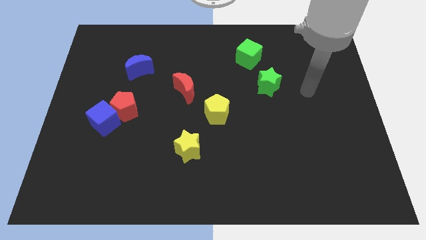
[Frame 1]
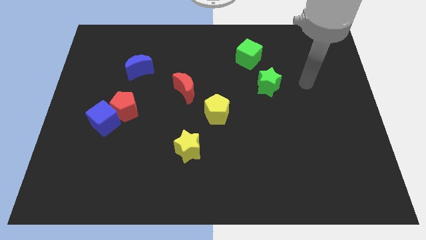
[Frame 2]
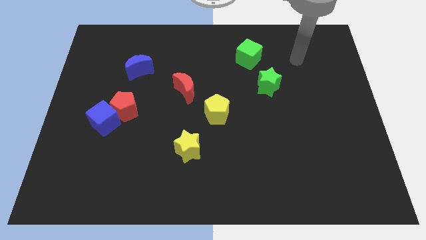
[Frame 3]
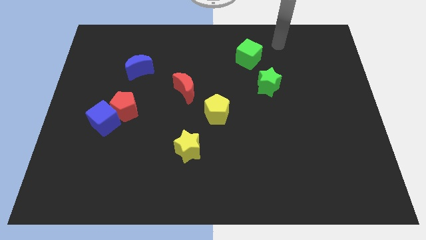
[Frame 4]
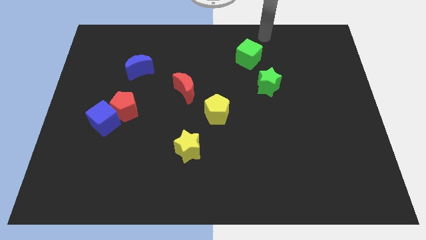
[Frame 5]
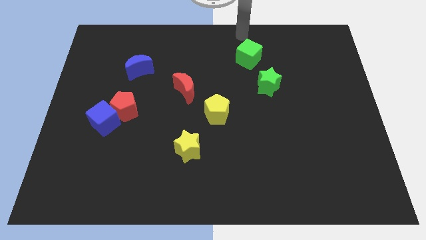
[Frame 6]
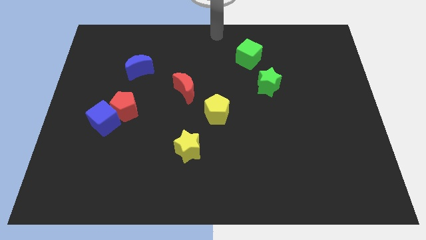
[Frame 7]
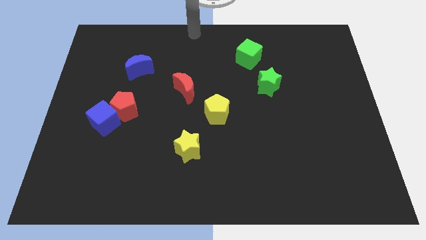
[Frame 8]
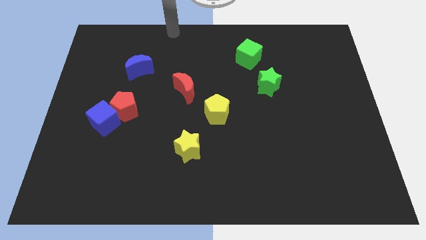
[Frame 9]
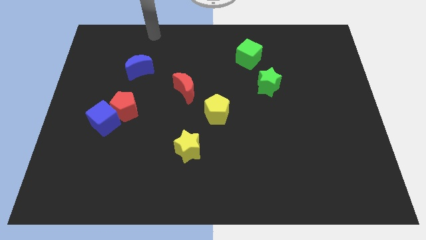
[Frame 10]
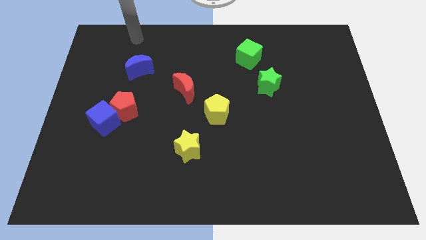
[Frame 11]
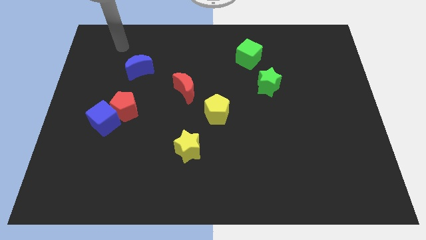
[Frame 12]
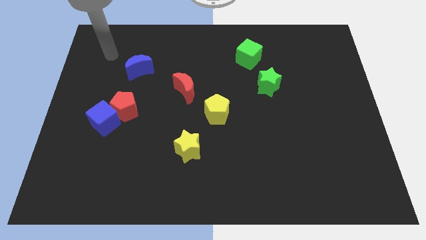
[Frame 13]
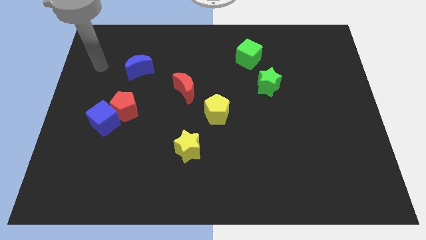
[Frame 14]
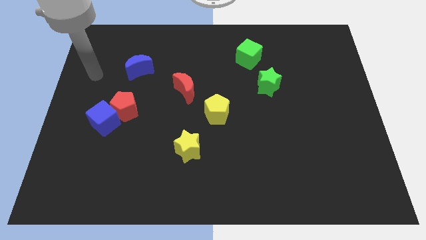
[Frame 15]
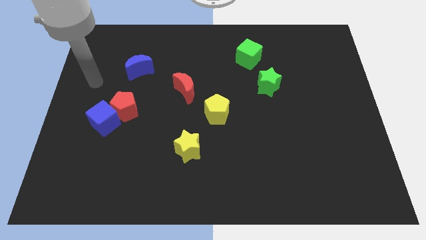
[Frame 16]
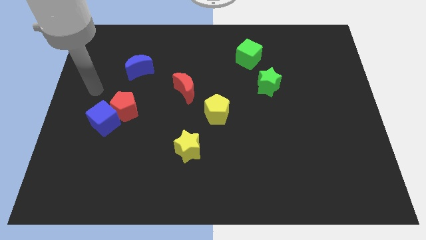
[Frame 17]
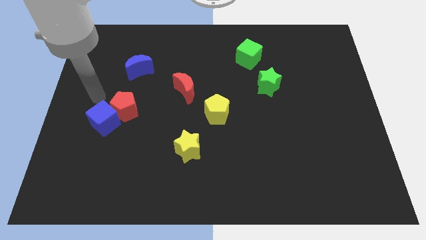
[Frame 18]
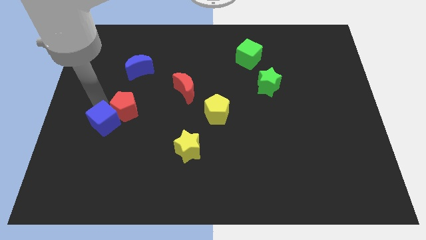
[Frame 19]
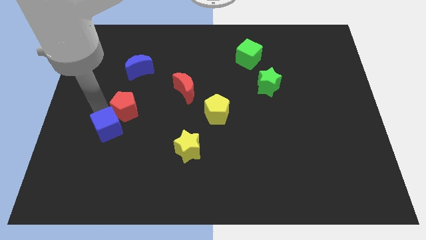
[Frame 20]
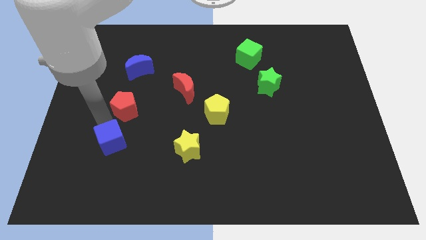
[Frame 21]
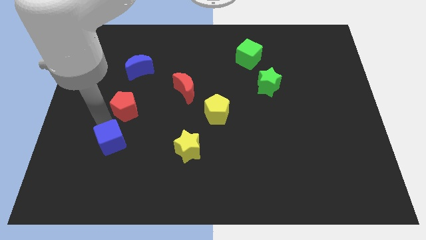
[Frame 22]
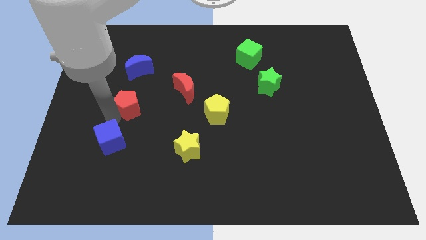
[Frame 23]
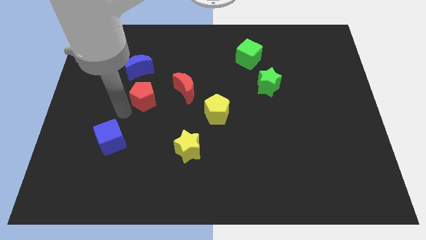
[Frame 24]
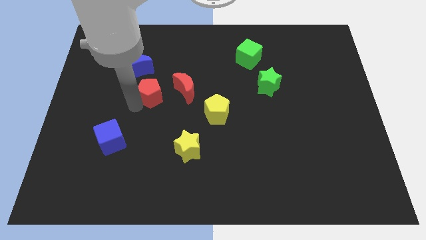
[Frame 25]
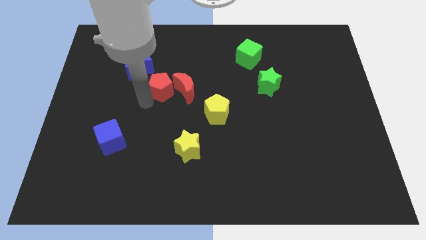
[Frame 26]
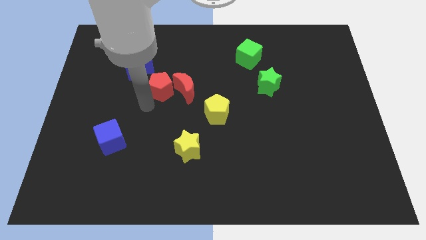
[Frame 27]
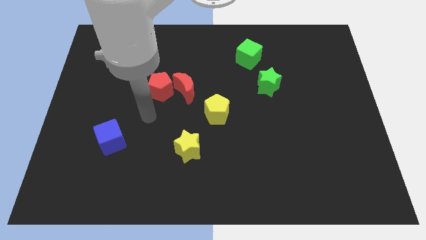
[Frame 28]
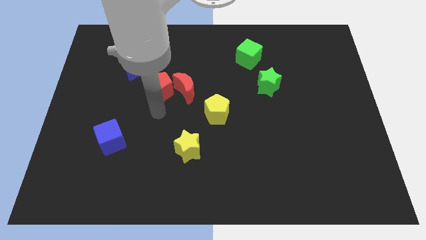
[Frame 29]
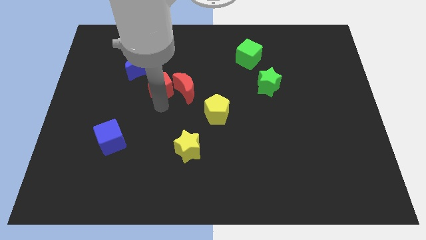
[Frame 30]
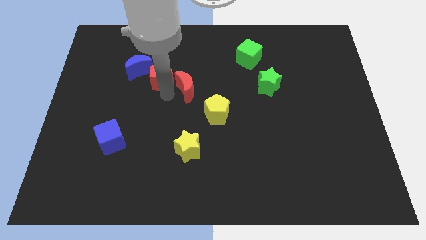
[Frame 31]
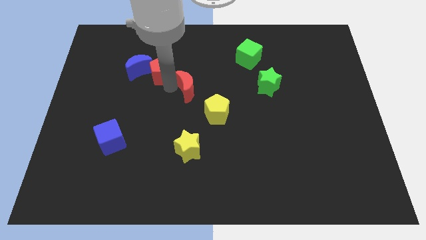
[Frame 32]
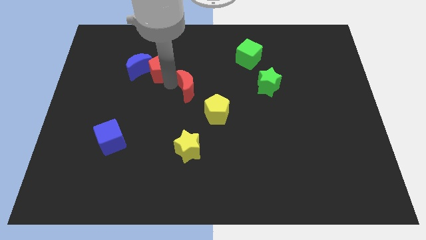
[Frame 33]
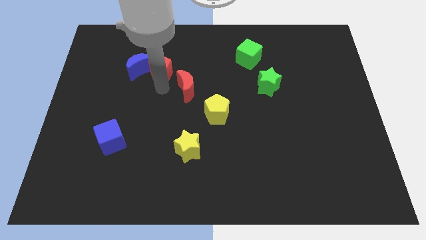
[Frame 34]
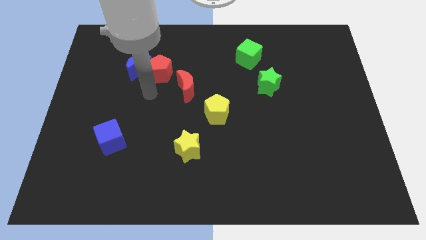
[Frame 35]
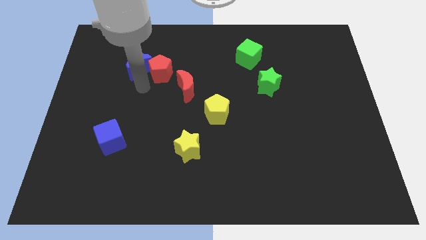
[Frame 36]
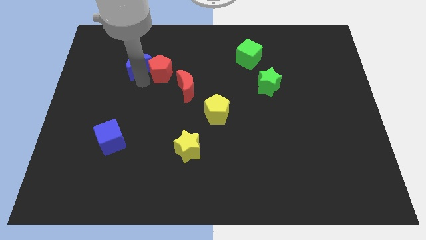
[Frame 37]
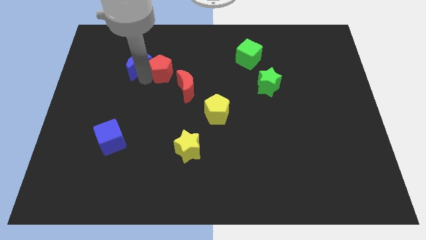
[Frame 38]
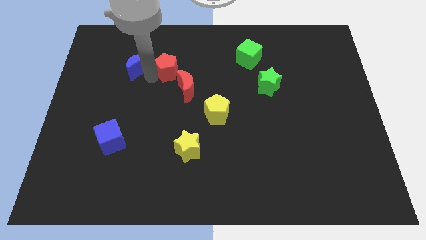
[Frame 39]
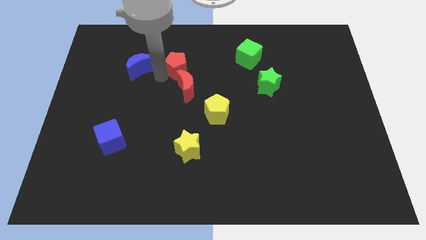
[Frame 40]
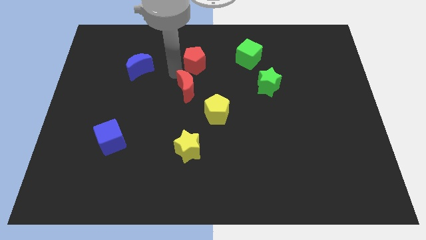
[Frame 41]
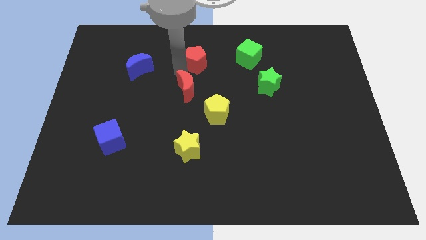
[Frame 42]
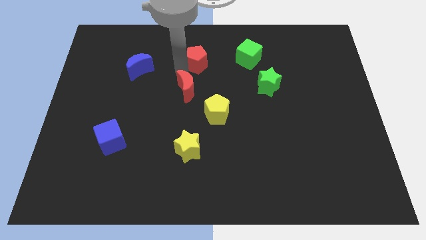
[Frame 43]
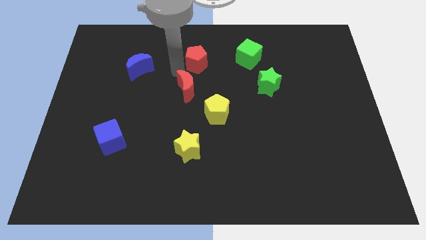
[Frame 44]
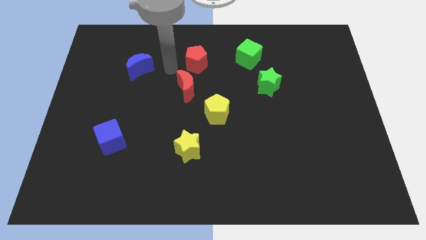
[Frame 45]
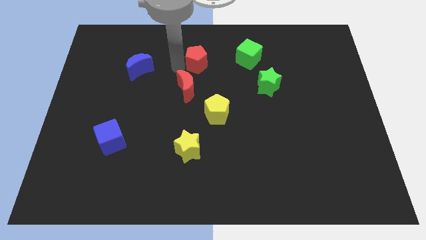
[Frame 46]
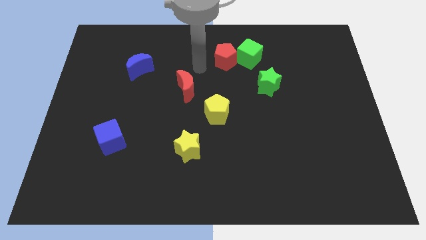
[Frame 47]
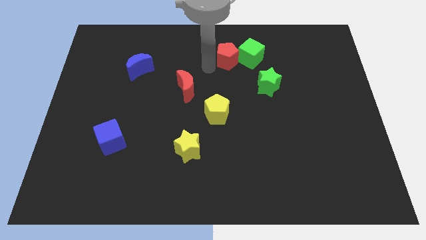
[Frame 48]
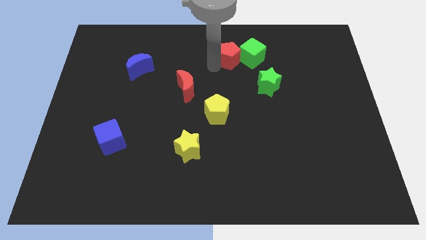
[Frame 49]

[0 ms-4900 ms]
put the red pentagon close to the green cube

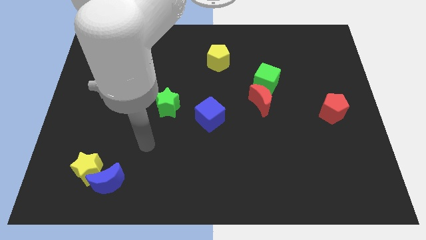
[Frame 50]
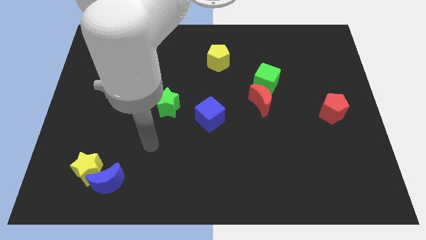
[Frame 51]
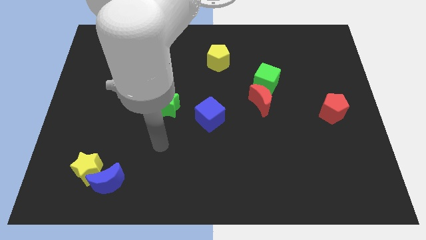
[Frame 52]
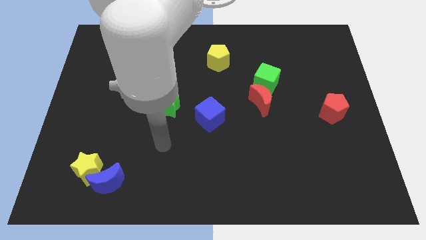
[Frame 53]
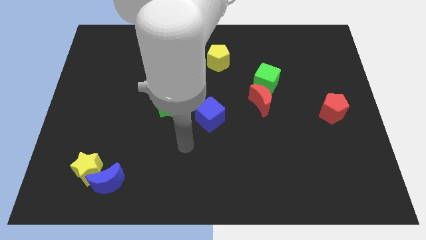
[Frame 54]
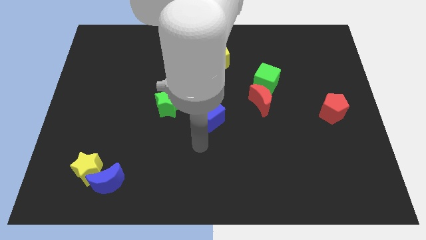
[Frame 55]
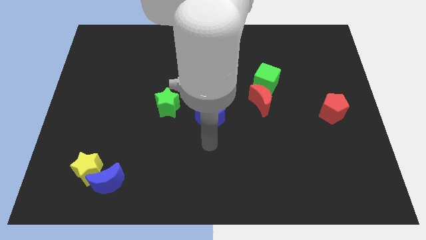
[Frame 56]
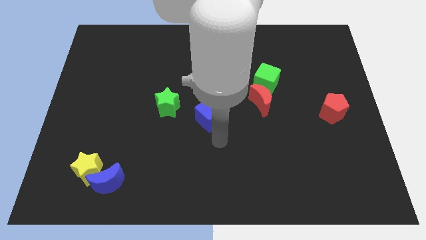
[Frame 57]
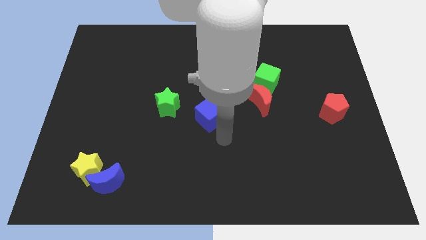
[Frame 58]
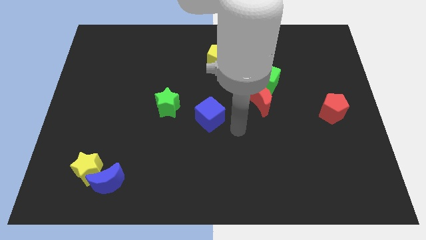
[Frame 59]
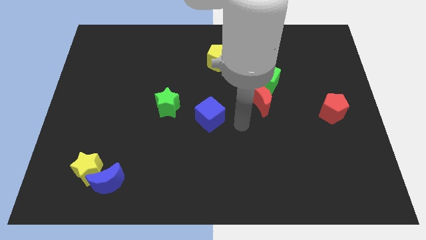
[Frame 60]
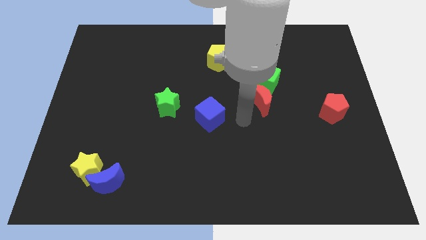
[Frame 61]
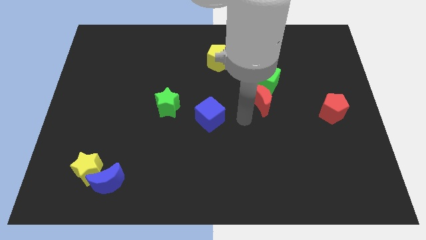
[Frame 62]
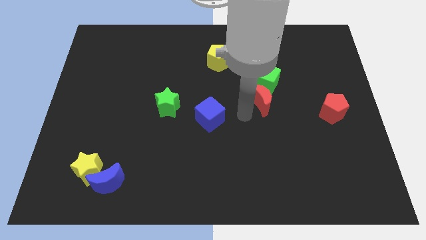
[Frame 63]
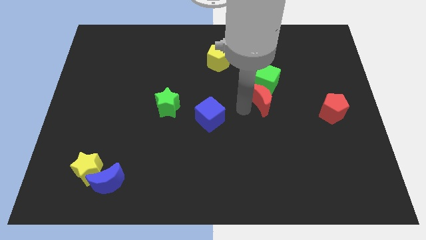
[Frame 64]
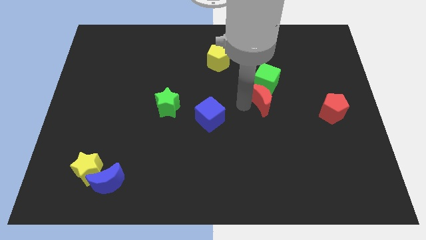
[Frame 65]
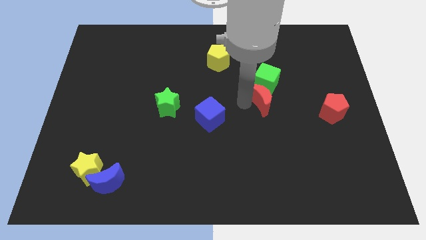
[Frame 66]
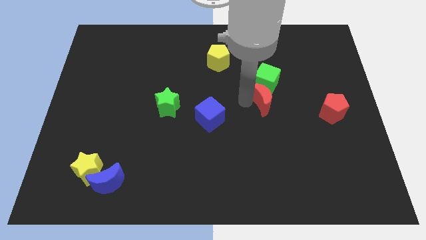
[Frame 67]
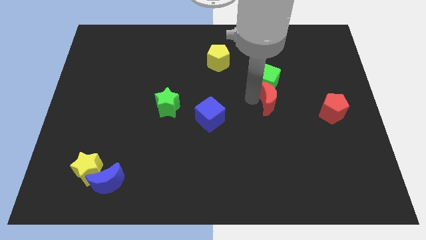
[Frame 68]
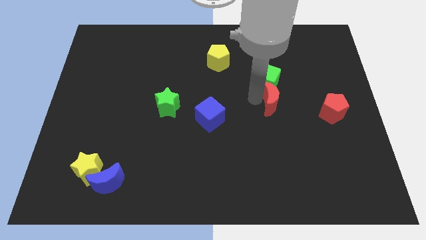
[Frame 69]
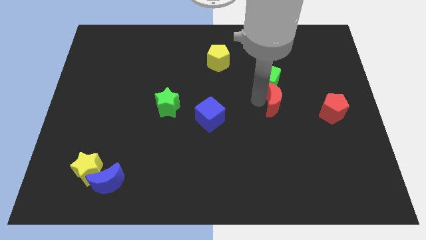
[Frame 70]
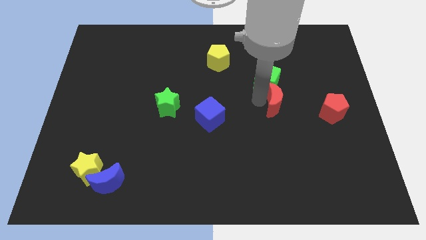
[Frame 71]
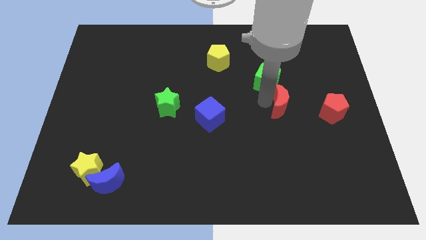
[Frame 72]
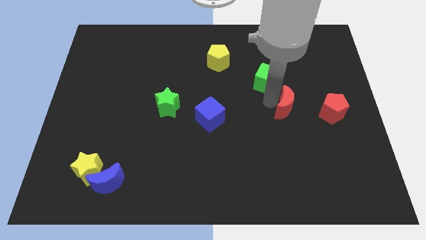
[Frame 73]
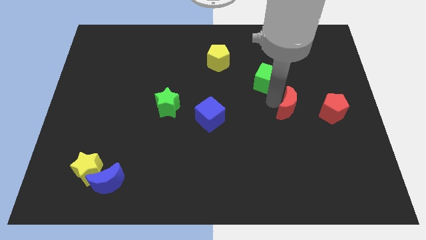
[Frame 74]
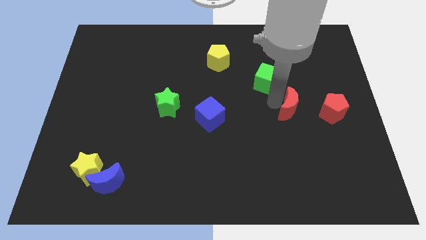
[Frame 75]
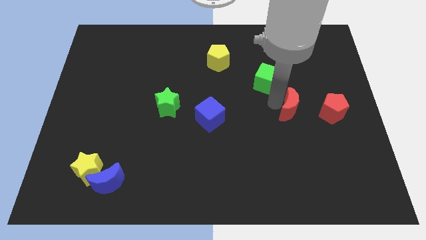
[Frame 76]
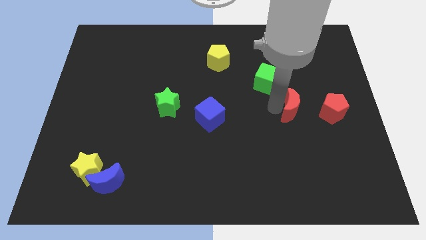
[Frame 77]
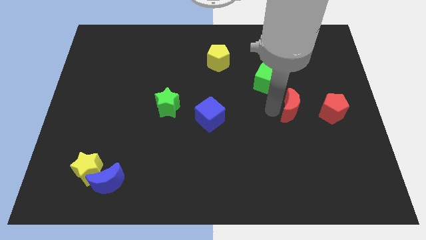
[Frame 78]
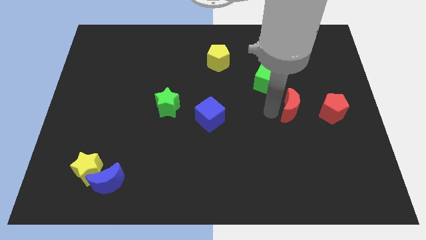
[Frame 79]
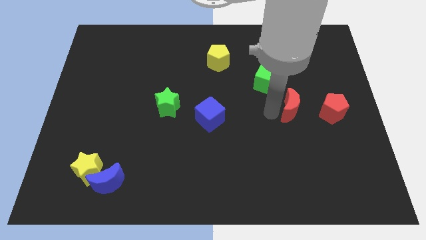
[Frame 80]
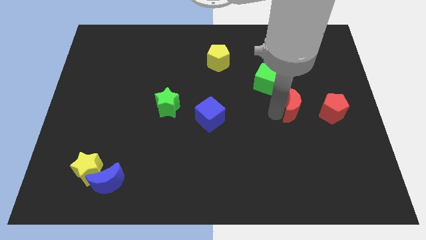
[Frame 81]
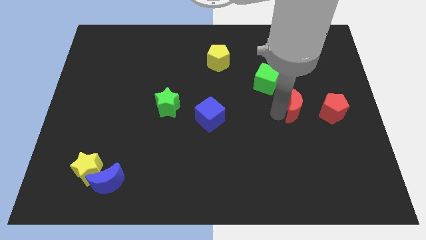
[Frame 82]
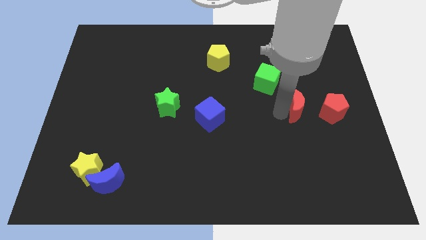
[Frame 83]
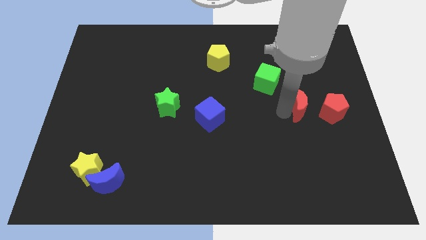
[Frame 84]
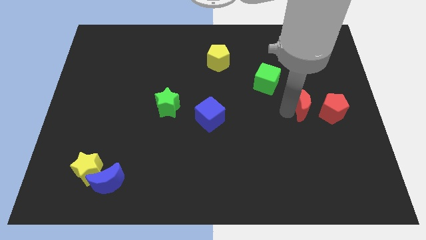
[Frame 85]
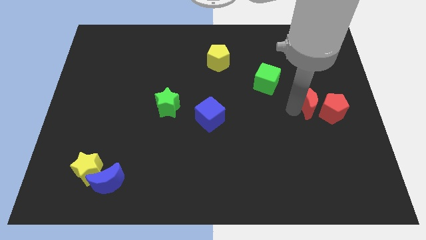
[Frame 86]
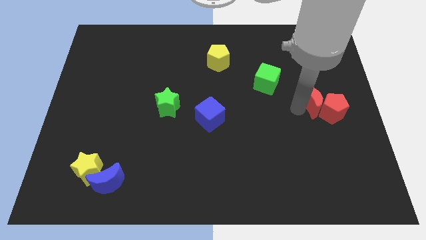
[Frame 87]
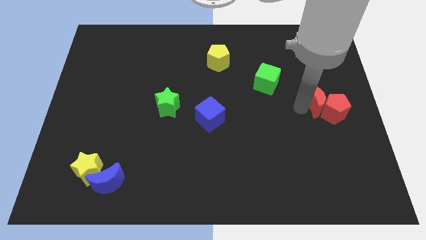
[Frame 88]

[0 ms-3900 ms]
move the red moon to the red pentagon
